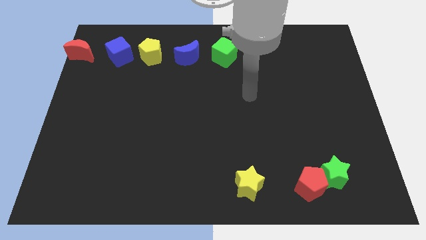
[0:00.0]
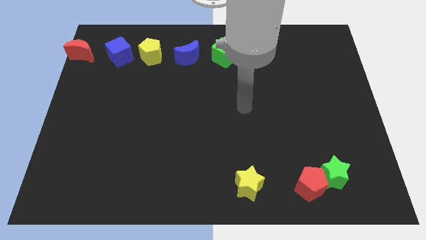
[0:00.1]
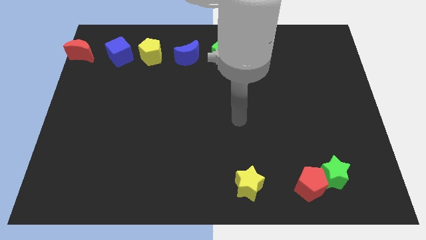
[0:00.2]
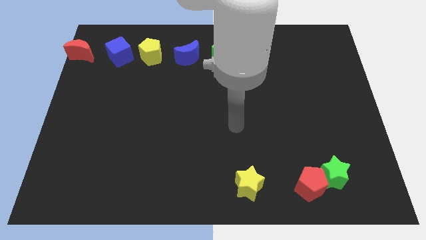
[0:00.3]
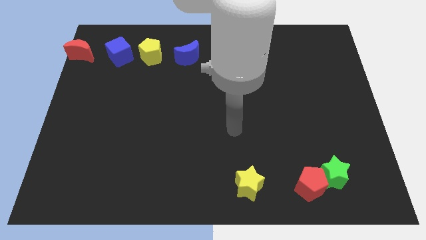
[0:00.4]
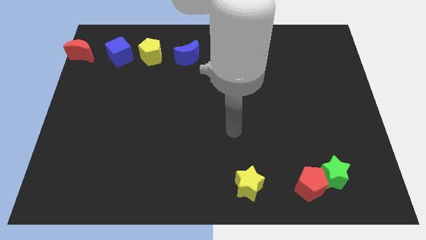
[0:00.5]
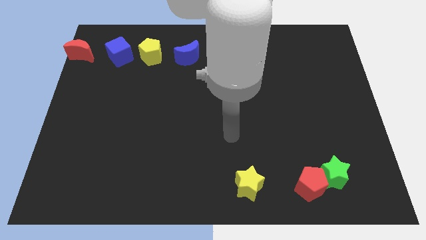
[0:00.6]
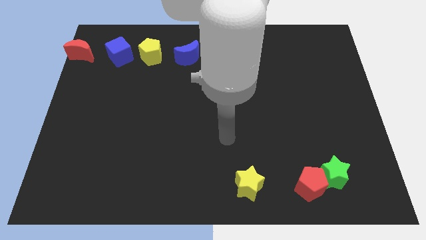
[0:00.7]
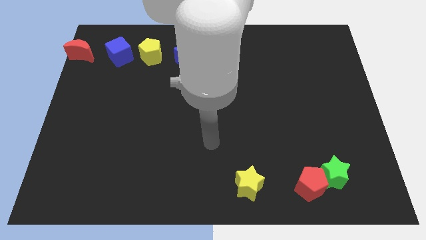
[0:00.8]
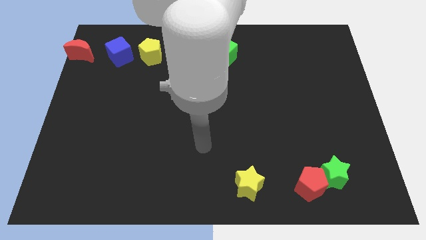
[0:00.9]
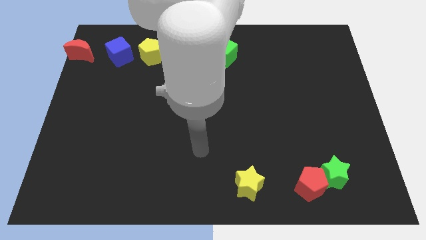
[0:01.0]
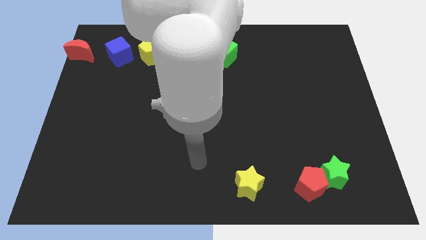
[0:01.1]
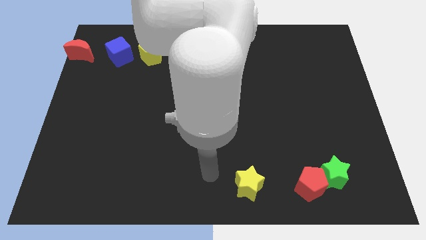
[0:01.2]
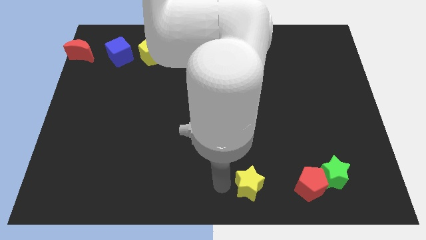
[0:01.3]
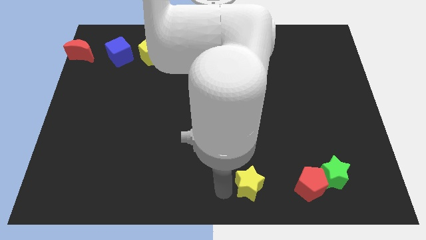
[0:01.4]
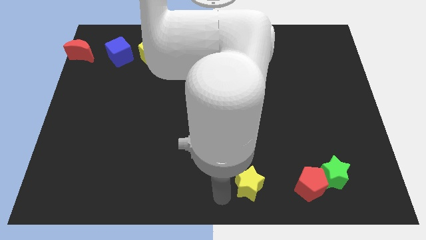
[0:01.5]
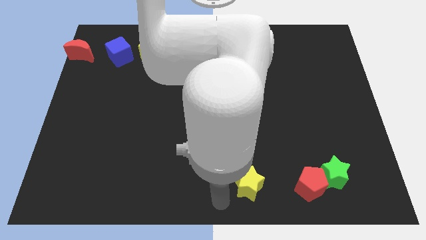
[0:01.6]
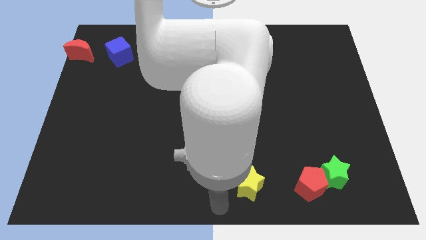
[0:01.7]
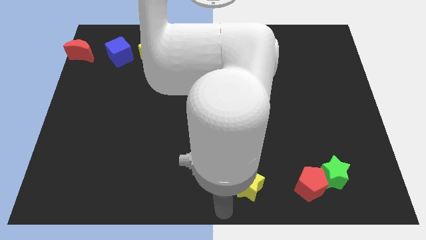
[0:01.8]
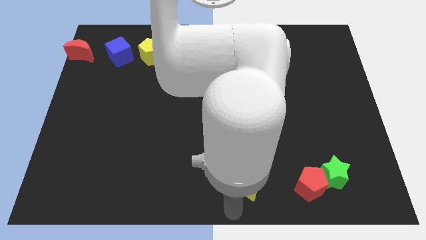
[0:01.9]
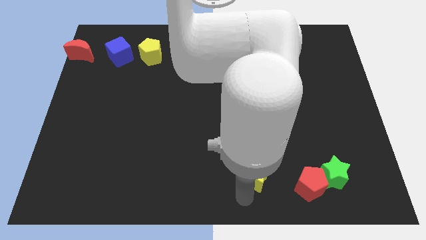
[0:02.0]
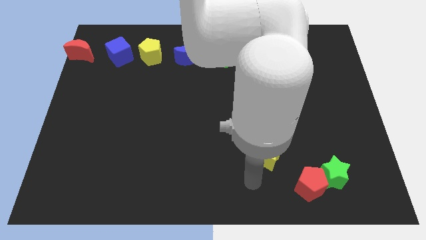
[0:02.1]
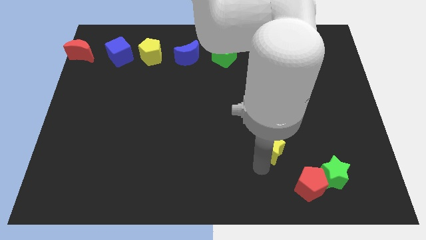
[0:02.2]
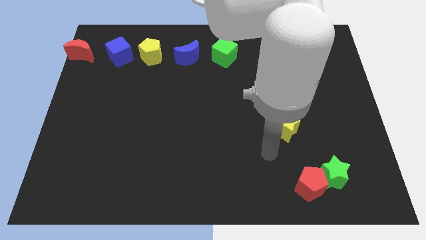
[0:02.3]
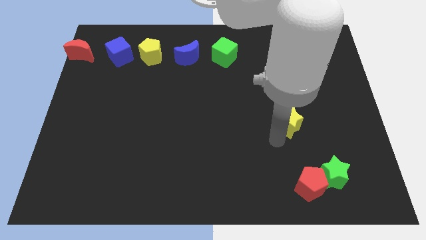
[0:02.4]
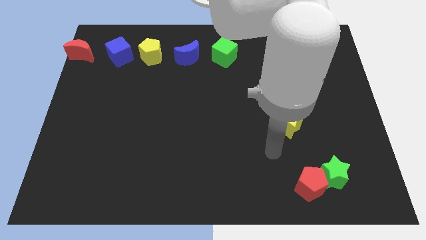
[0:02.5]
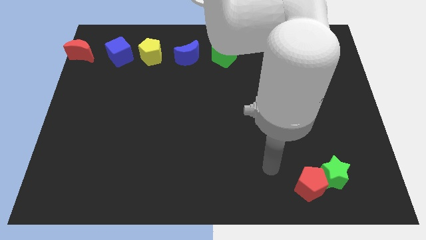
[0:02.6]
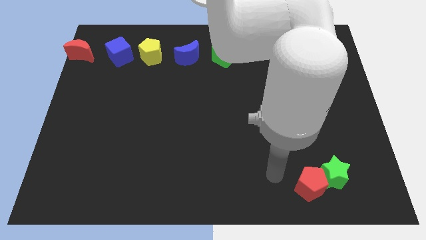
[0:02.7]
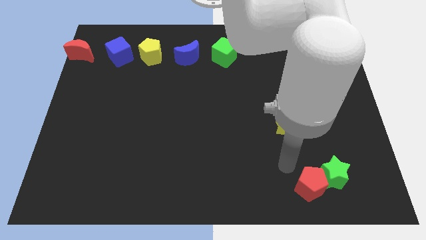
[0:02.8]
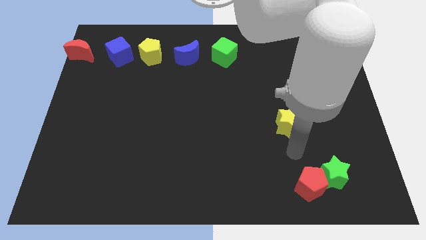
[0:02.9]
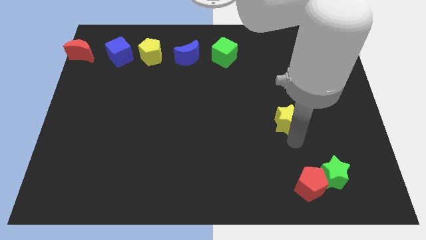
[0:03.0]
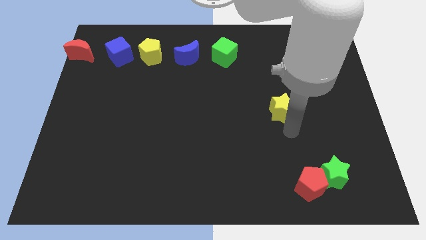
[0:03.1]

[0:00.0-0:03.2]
push the yellow star to wards the top side of the board

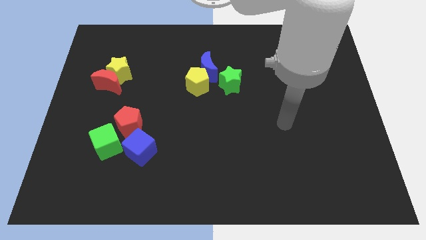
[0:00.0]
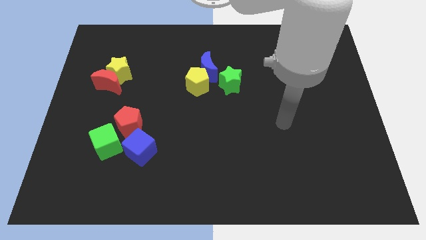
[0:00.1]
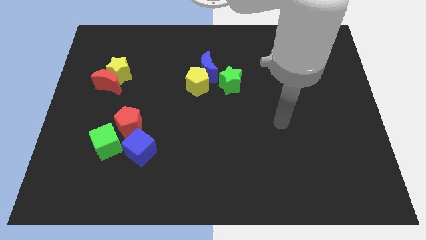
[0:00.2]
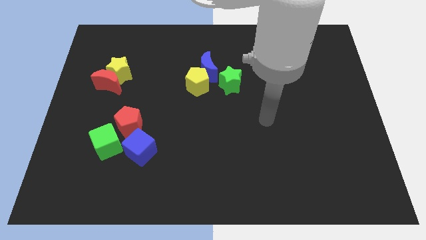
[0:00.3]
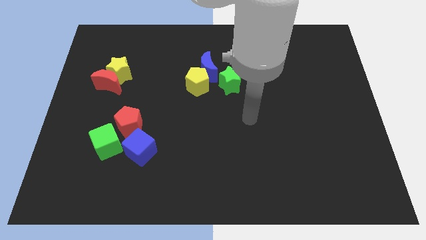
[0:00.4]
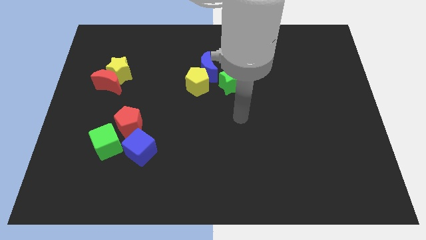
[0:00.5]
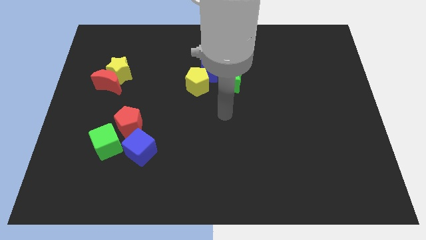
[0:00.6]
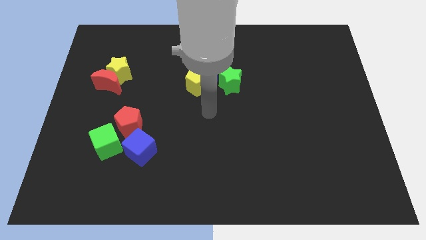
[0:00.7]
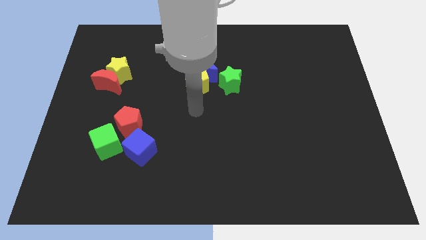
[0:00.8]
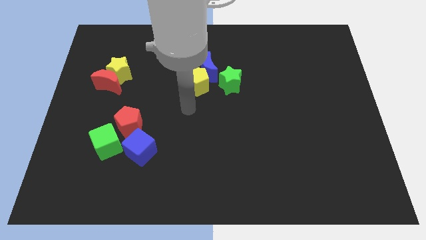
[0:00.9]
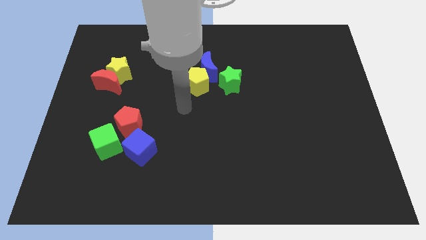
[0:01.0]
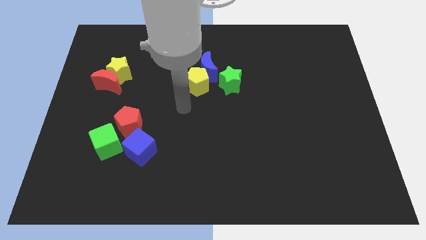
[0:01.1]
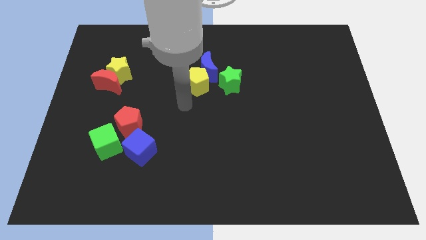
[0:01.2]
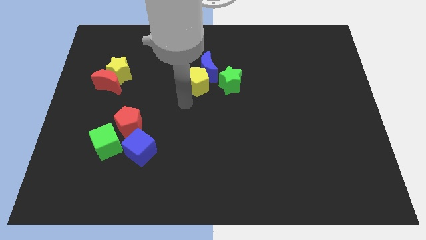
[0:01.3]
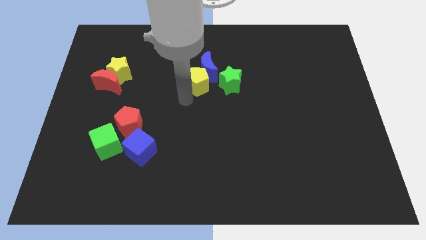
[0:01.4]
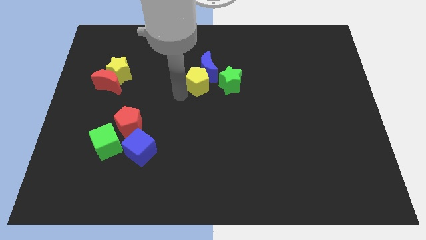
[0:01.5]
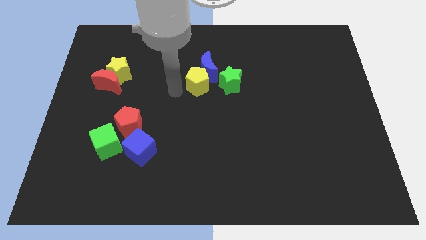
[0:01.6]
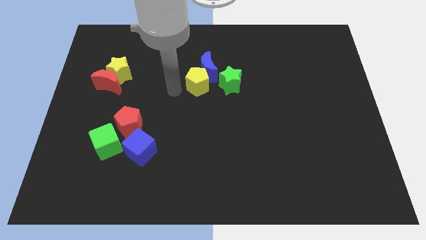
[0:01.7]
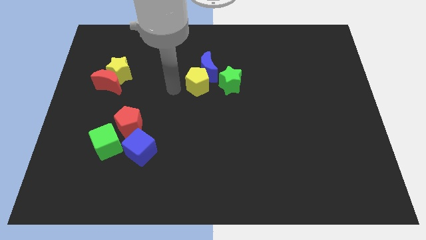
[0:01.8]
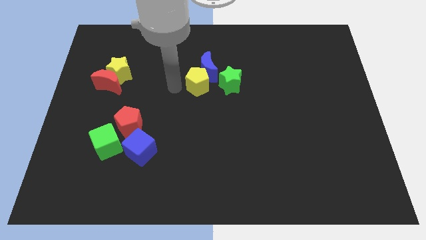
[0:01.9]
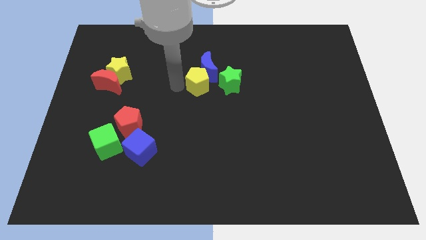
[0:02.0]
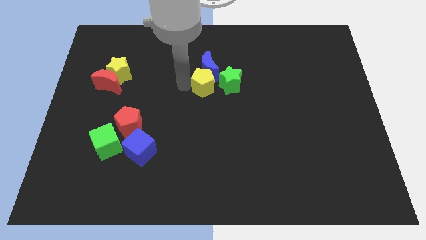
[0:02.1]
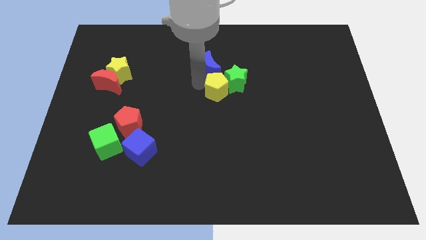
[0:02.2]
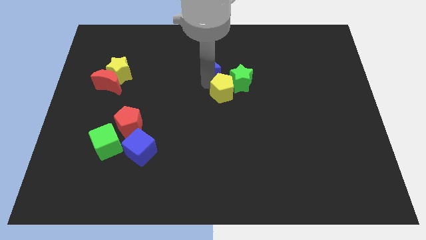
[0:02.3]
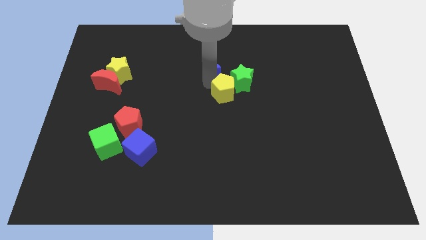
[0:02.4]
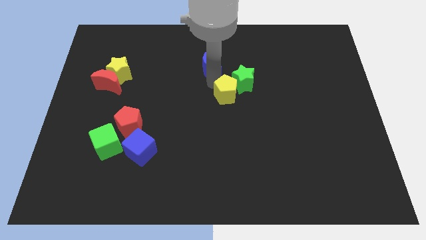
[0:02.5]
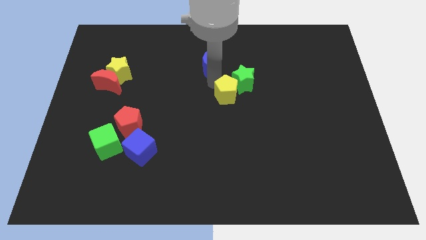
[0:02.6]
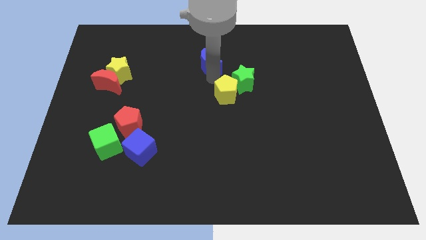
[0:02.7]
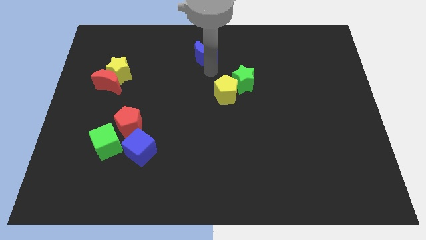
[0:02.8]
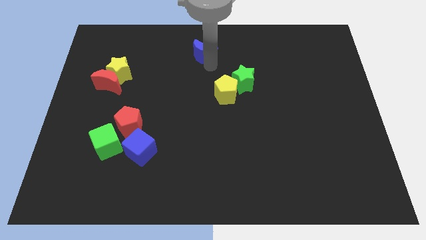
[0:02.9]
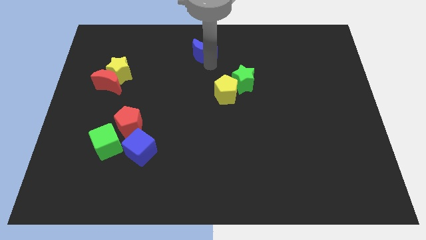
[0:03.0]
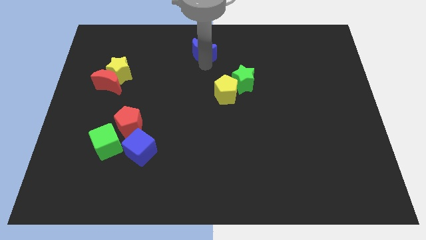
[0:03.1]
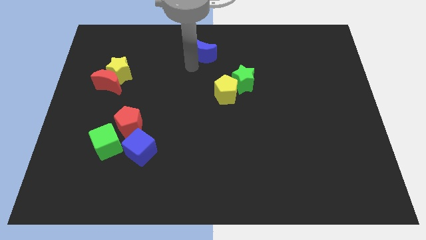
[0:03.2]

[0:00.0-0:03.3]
move the blue crescent away from the yellow pentagon and the green star

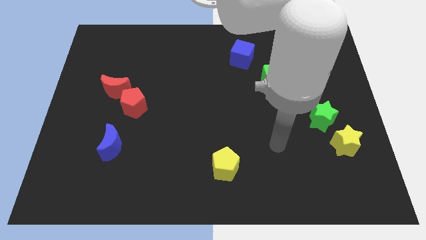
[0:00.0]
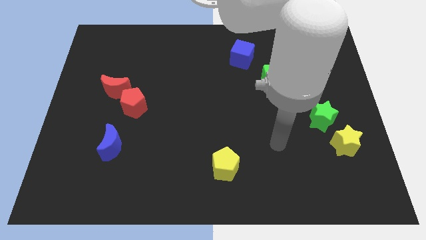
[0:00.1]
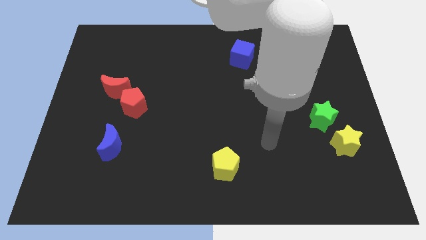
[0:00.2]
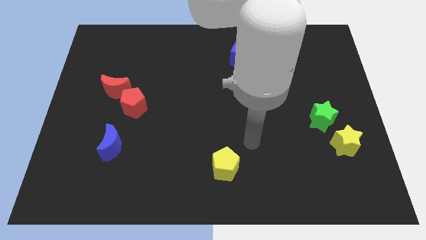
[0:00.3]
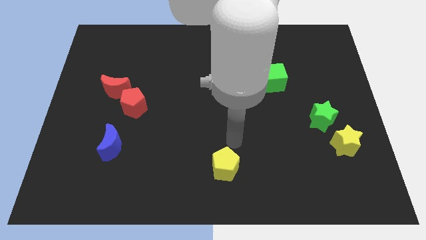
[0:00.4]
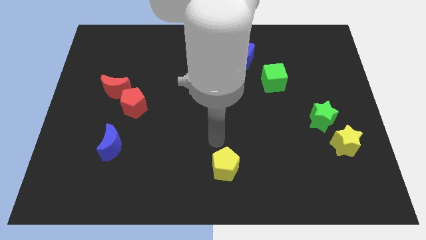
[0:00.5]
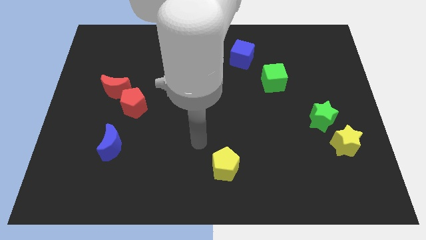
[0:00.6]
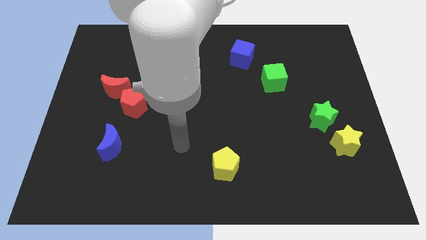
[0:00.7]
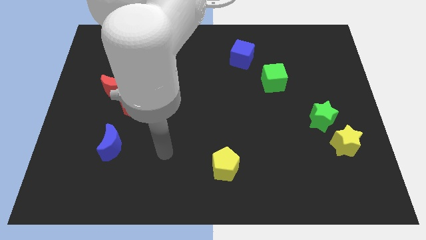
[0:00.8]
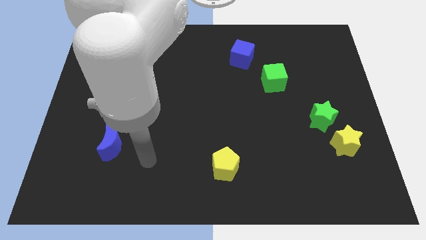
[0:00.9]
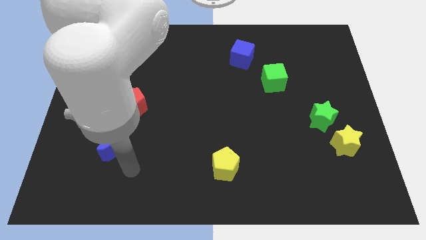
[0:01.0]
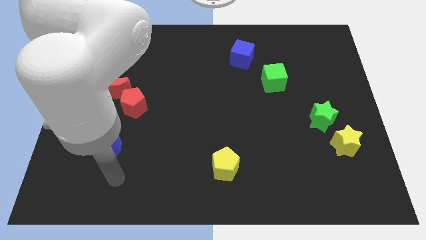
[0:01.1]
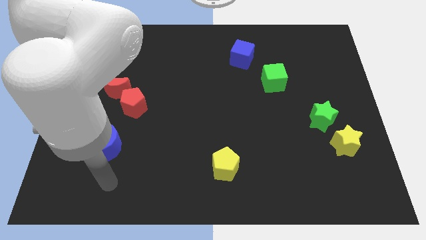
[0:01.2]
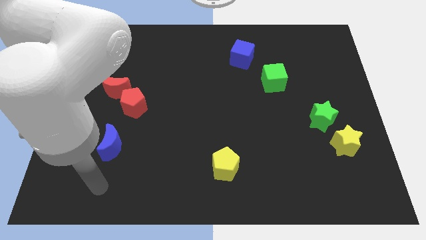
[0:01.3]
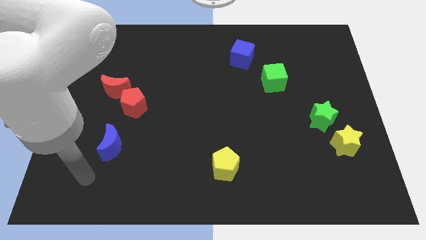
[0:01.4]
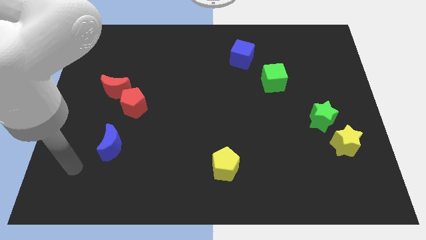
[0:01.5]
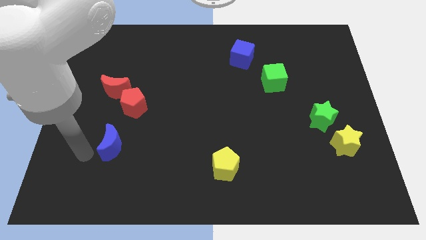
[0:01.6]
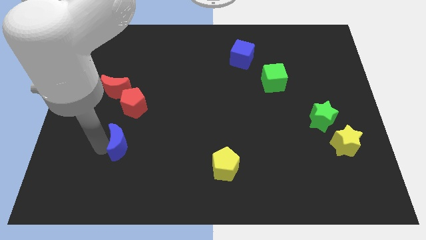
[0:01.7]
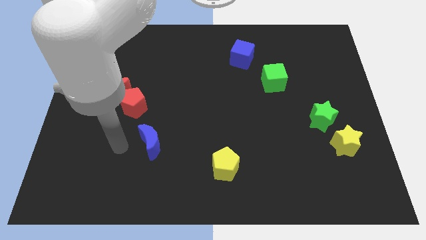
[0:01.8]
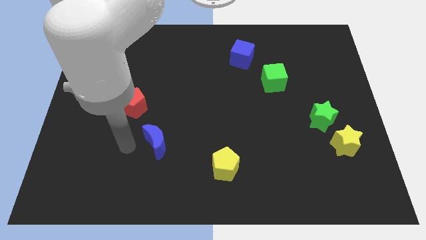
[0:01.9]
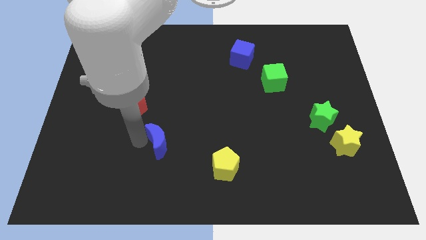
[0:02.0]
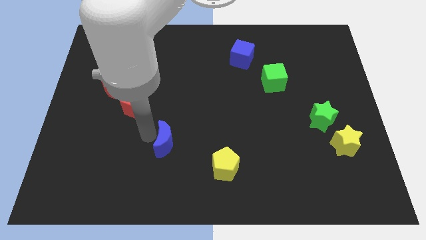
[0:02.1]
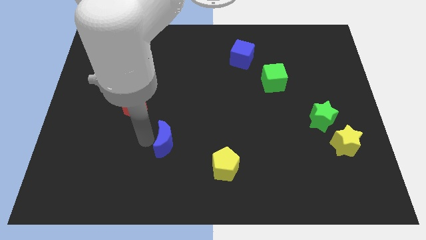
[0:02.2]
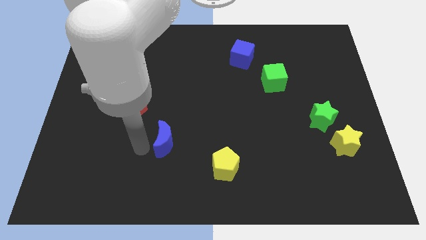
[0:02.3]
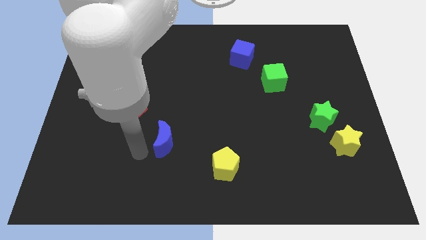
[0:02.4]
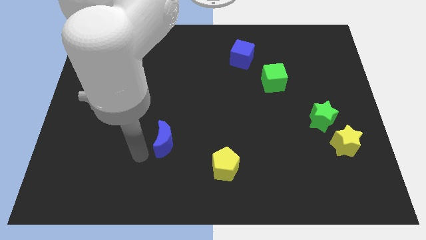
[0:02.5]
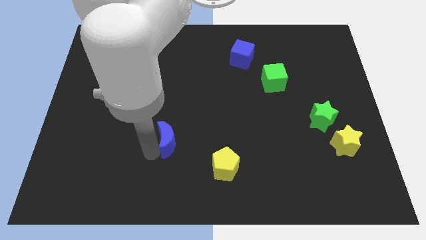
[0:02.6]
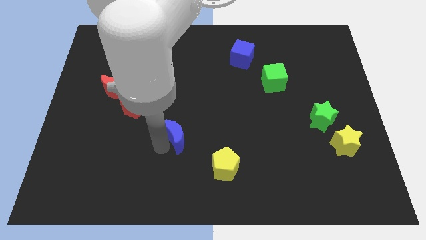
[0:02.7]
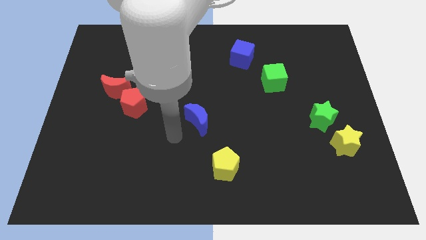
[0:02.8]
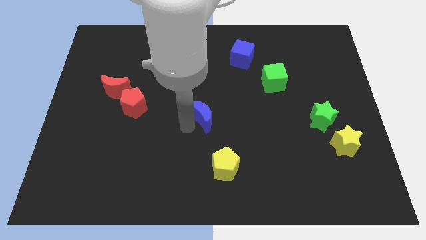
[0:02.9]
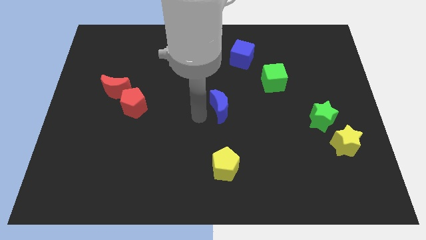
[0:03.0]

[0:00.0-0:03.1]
slide blue moon parallel to red pentagon
